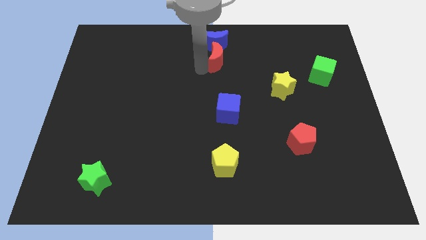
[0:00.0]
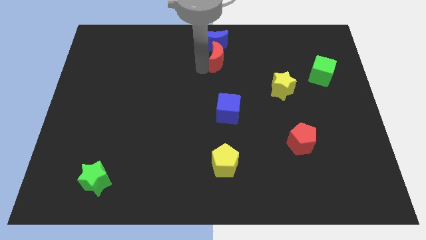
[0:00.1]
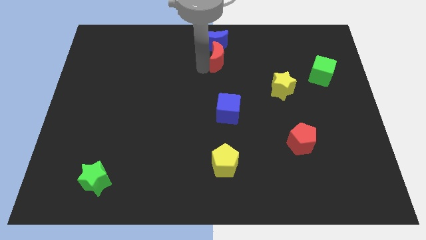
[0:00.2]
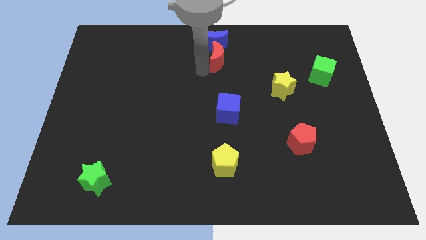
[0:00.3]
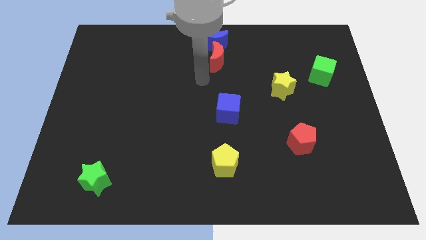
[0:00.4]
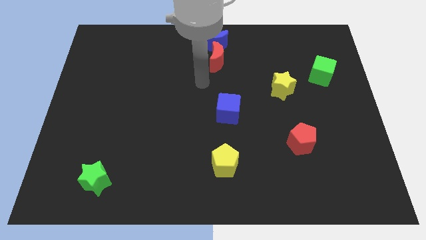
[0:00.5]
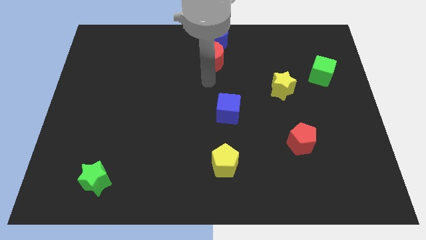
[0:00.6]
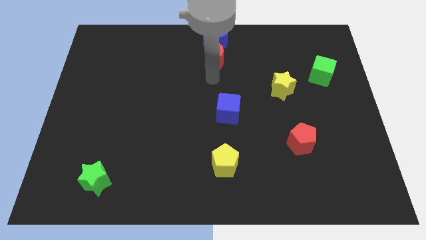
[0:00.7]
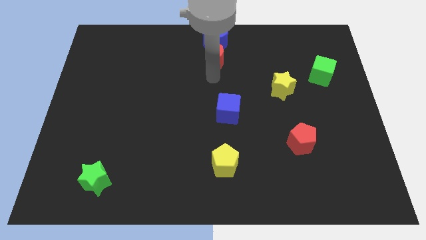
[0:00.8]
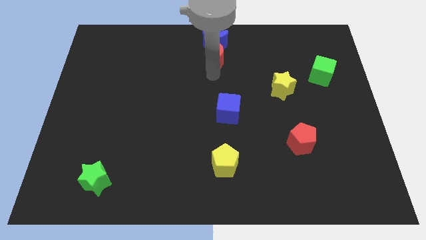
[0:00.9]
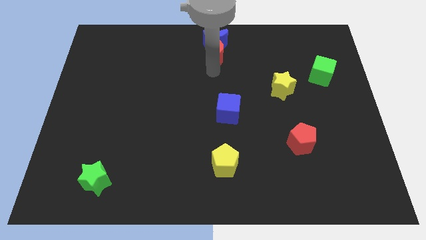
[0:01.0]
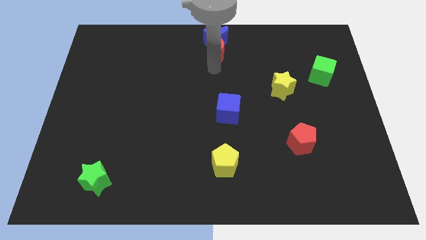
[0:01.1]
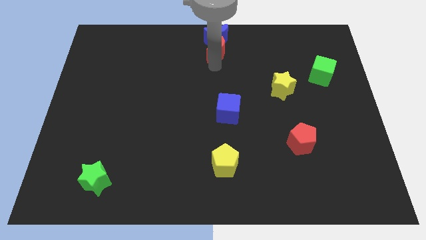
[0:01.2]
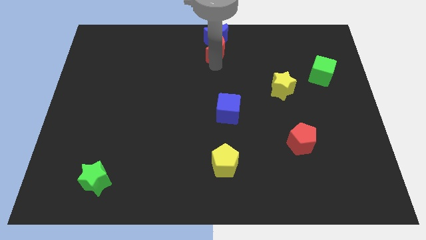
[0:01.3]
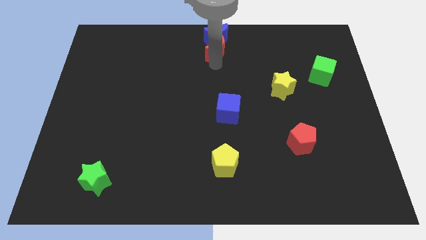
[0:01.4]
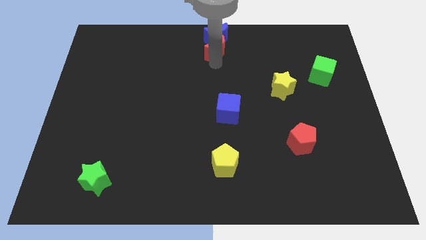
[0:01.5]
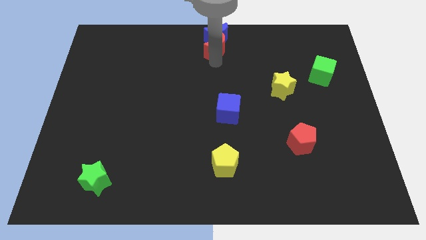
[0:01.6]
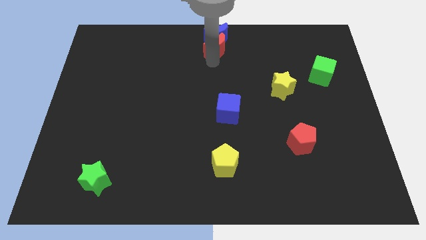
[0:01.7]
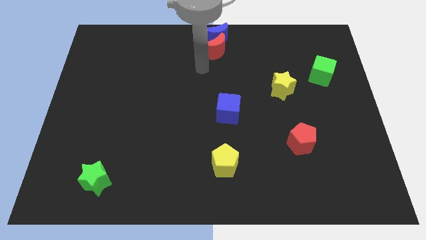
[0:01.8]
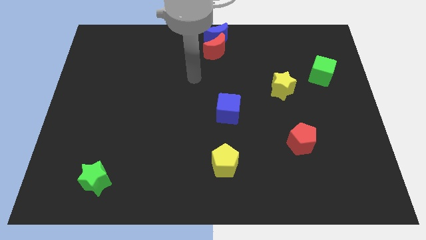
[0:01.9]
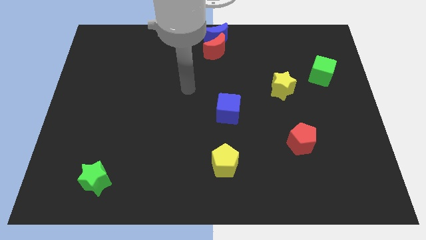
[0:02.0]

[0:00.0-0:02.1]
drag red and the blue crescent to the top center

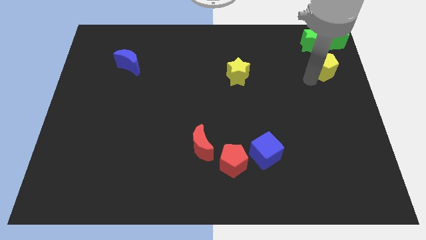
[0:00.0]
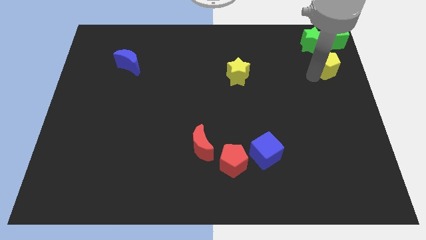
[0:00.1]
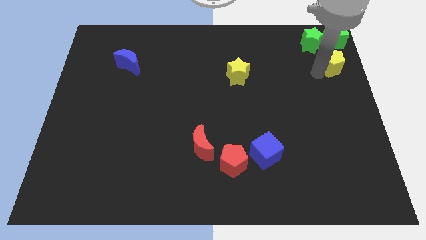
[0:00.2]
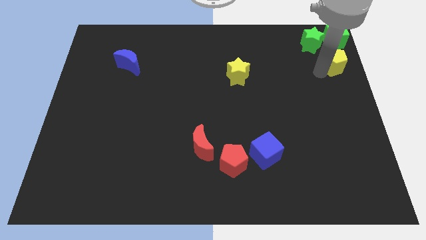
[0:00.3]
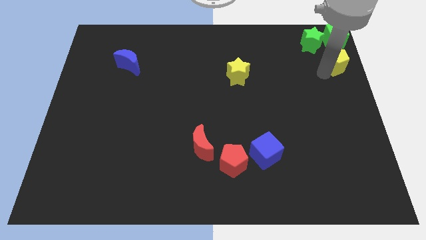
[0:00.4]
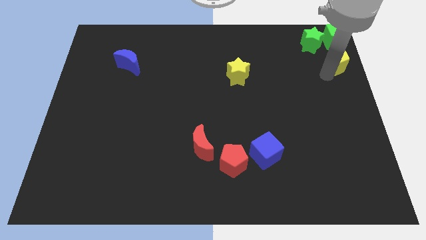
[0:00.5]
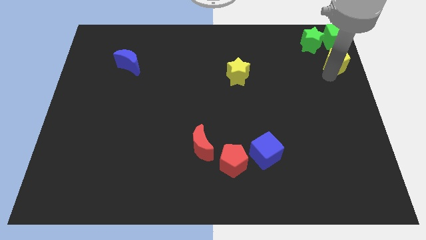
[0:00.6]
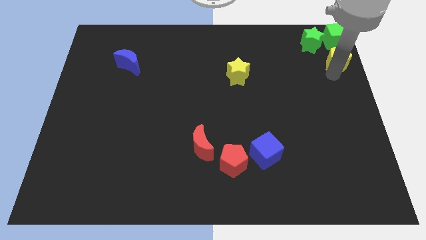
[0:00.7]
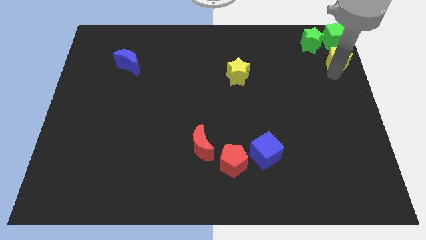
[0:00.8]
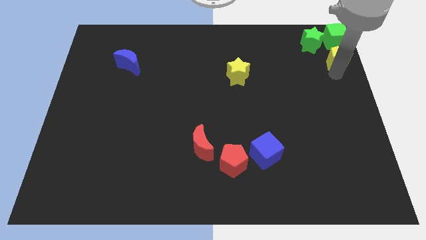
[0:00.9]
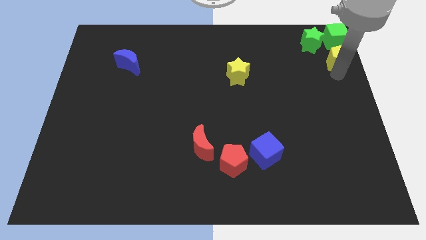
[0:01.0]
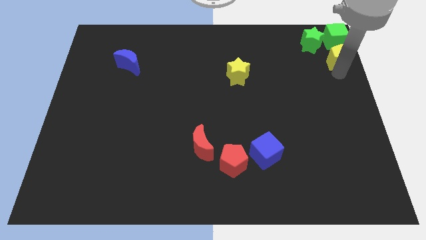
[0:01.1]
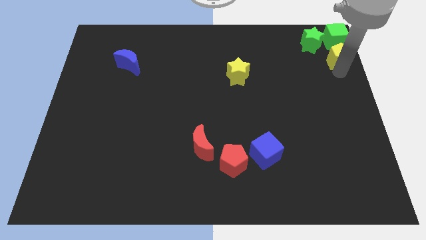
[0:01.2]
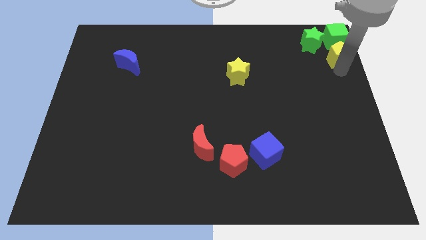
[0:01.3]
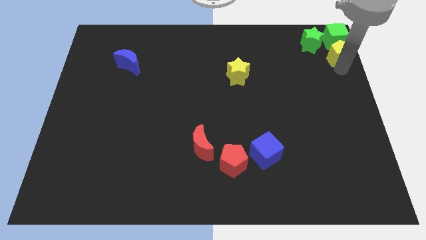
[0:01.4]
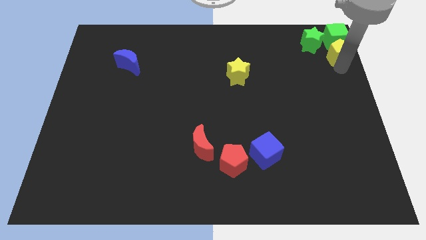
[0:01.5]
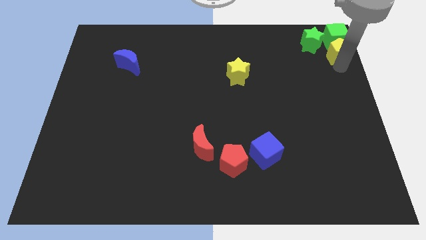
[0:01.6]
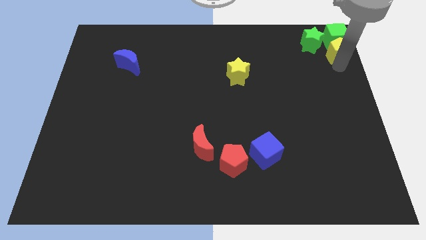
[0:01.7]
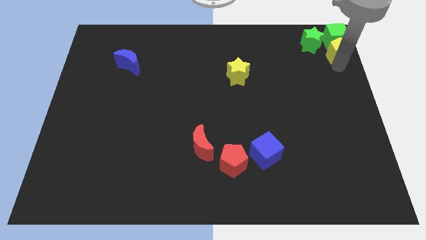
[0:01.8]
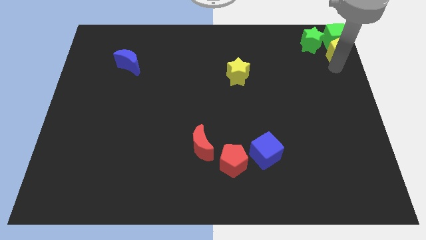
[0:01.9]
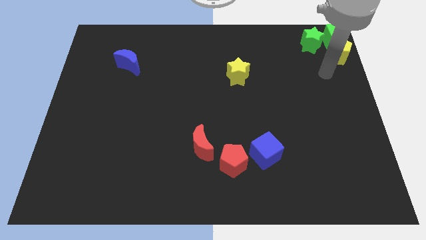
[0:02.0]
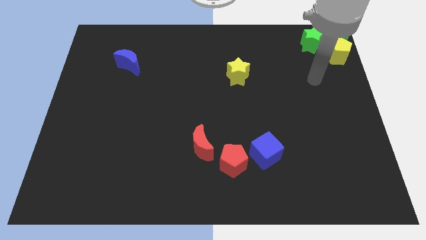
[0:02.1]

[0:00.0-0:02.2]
push the yellow pentagon to the bottom side of the green cube

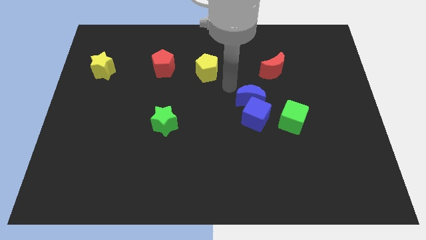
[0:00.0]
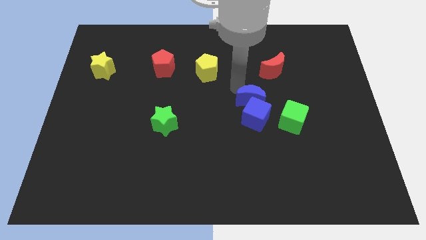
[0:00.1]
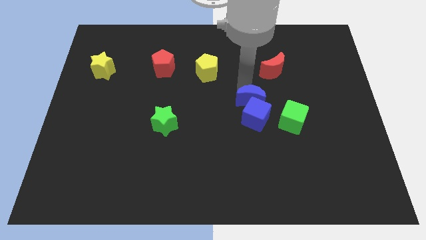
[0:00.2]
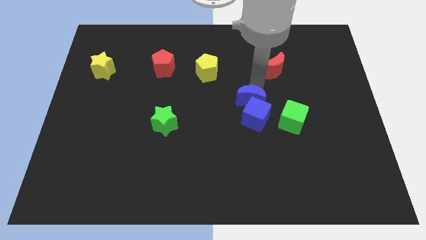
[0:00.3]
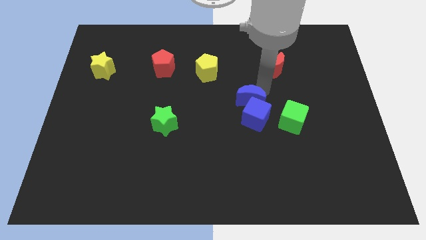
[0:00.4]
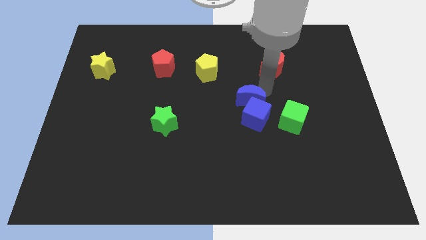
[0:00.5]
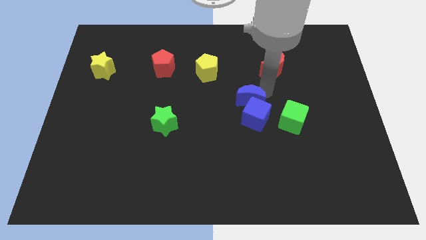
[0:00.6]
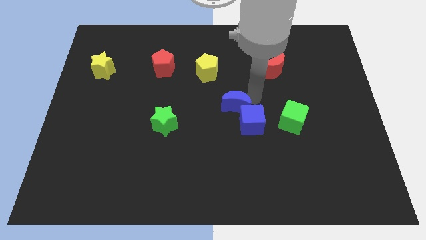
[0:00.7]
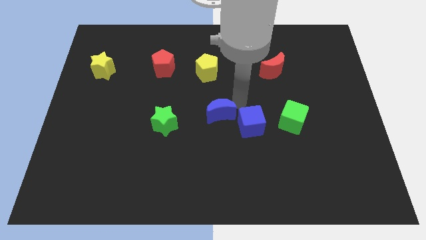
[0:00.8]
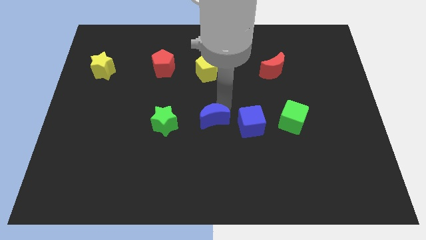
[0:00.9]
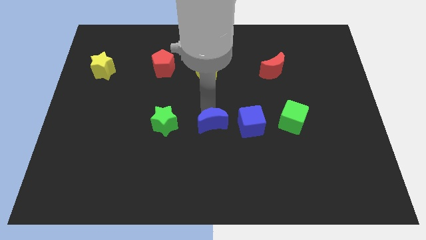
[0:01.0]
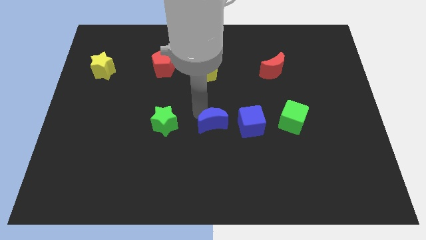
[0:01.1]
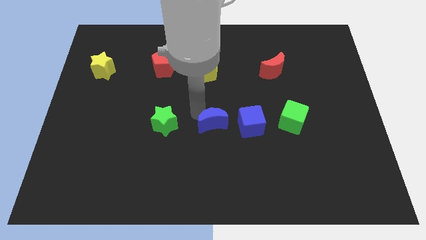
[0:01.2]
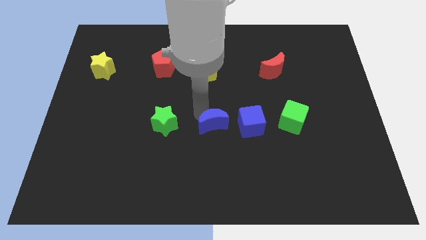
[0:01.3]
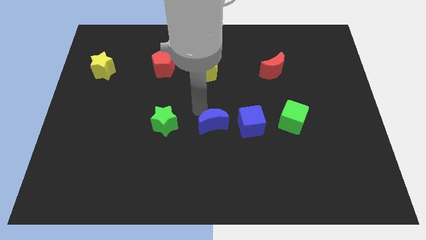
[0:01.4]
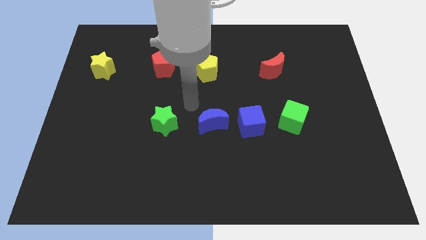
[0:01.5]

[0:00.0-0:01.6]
push the blue moon in between blue cube and green star

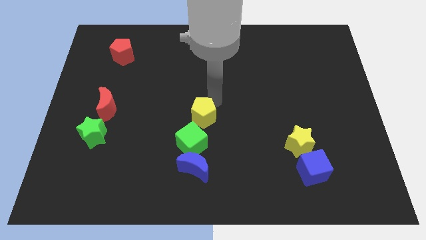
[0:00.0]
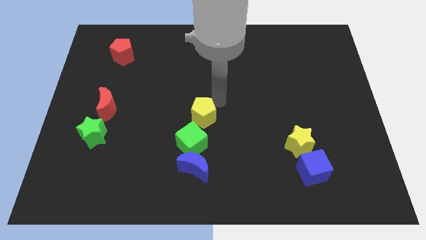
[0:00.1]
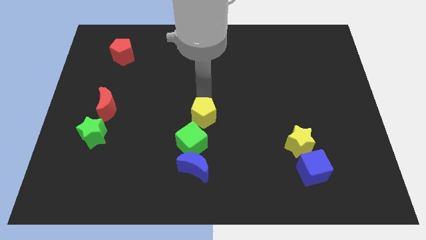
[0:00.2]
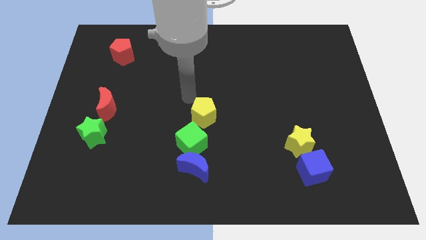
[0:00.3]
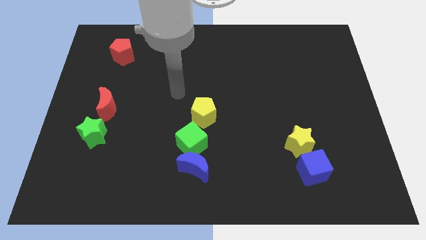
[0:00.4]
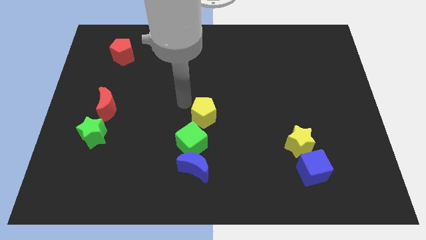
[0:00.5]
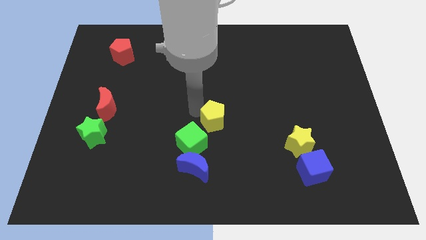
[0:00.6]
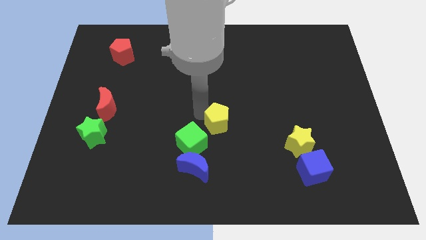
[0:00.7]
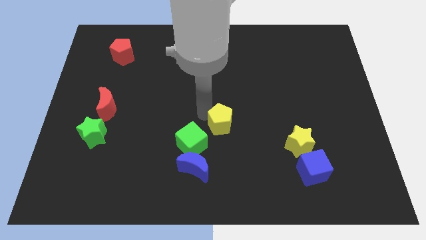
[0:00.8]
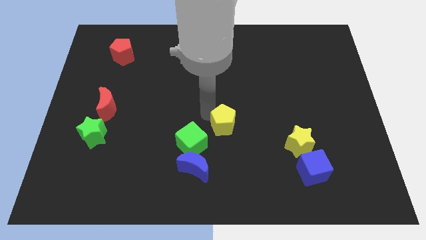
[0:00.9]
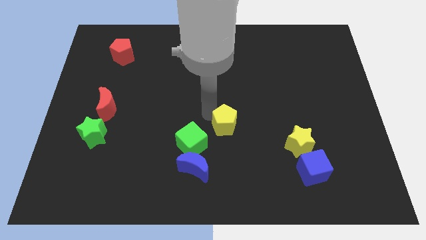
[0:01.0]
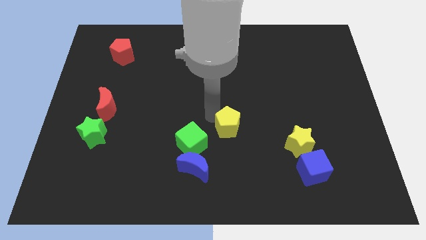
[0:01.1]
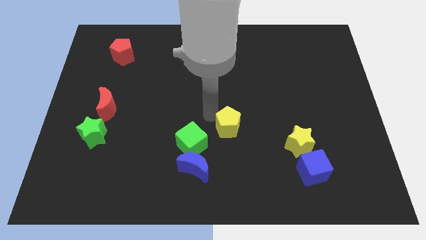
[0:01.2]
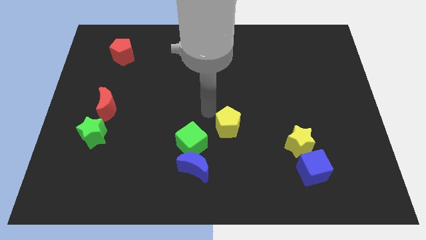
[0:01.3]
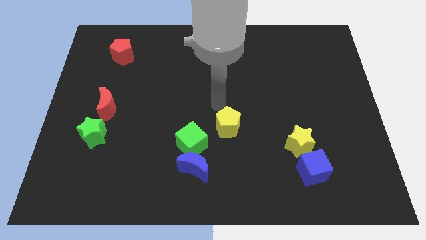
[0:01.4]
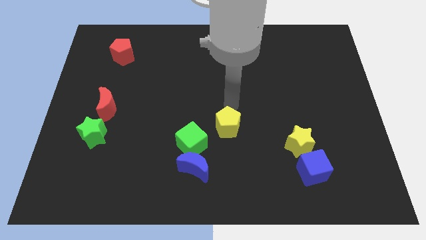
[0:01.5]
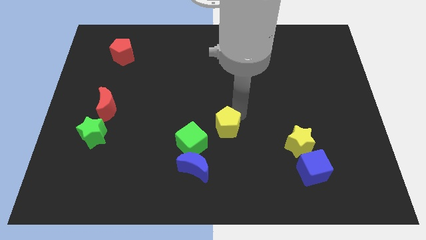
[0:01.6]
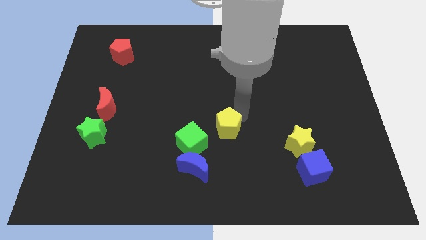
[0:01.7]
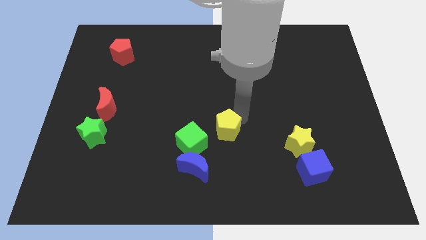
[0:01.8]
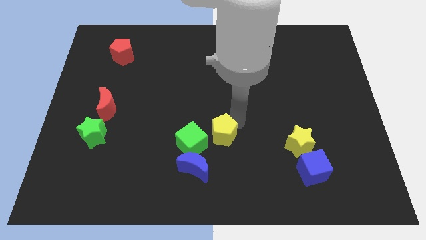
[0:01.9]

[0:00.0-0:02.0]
move the yellow pentagon to the right side of the green cube

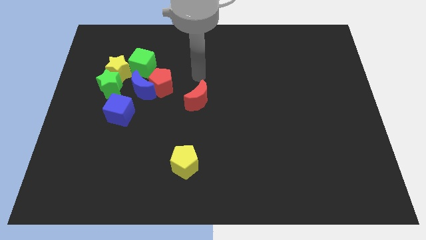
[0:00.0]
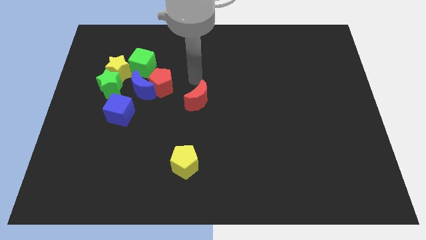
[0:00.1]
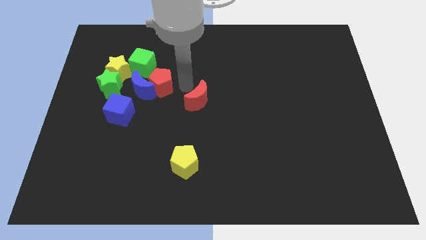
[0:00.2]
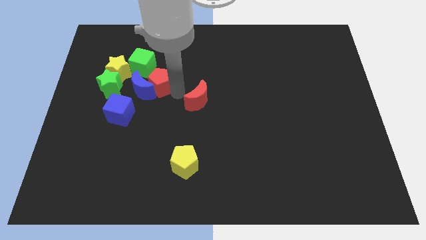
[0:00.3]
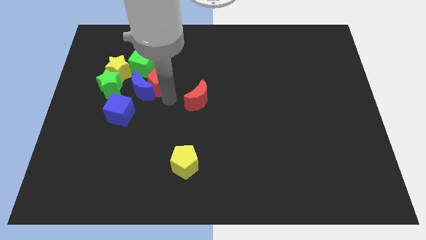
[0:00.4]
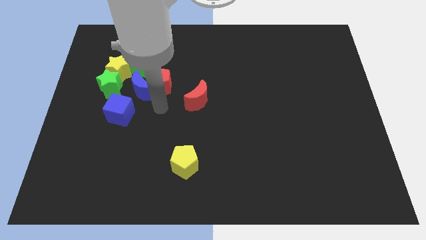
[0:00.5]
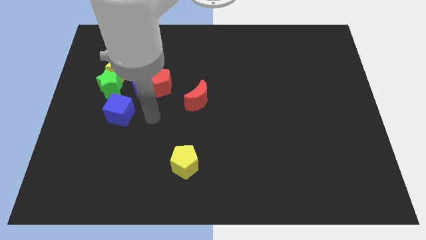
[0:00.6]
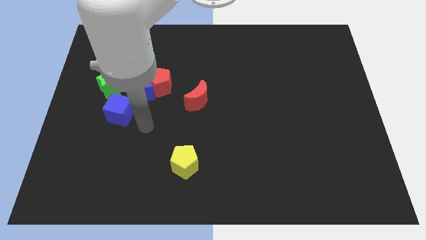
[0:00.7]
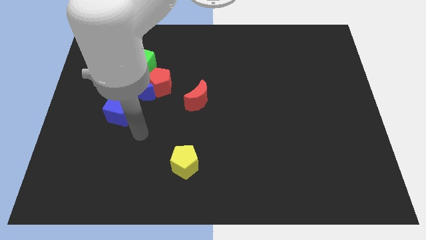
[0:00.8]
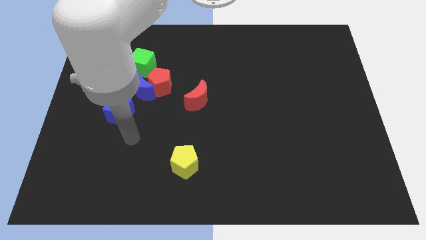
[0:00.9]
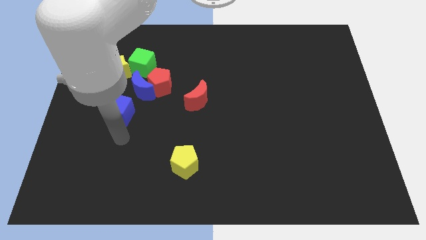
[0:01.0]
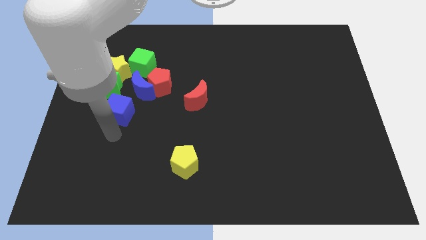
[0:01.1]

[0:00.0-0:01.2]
place your arm to the bottom of the blue cube
